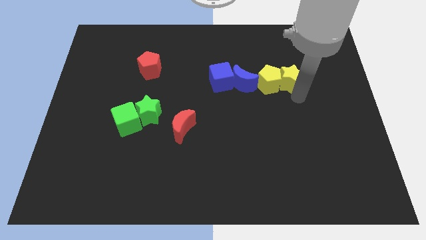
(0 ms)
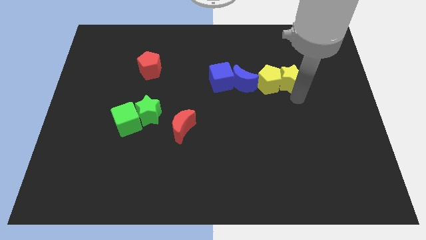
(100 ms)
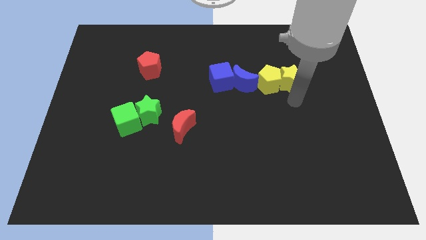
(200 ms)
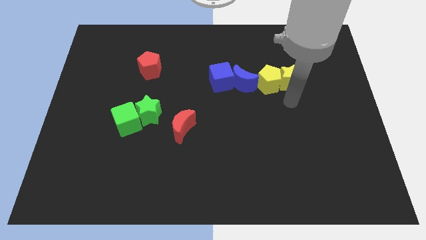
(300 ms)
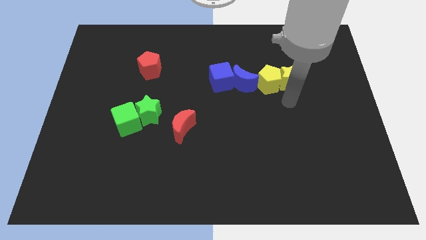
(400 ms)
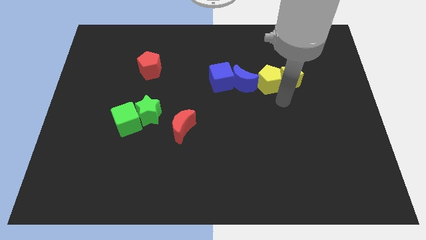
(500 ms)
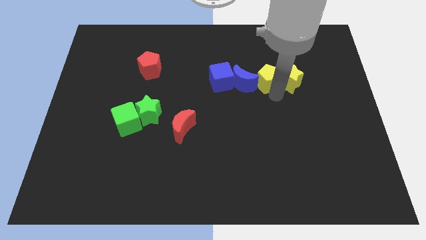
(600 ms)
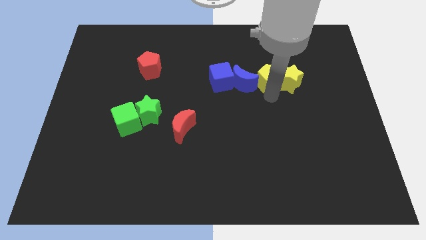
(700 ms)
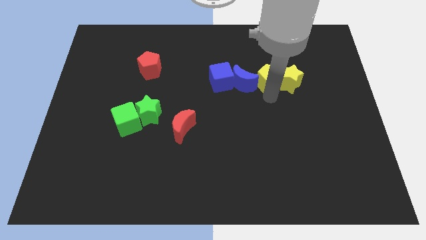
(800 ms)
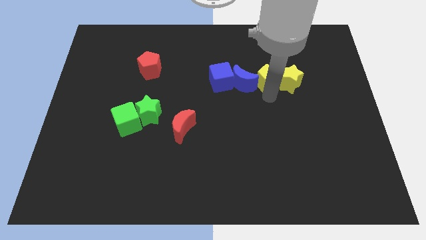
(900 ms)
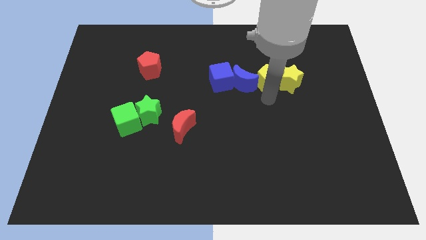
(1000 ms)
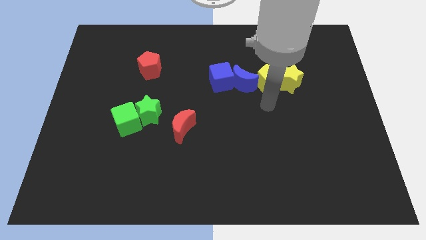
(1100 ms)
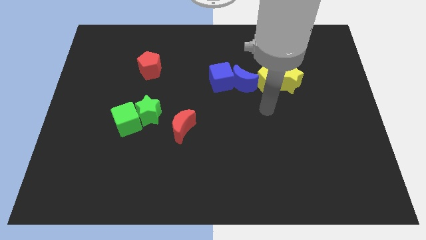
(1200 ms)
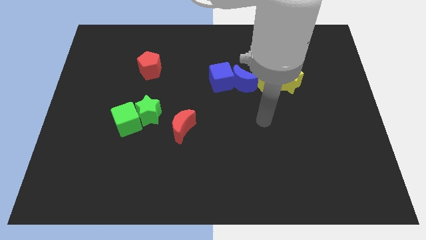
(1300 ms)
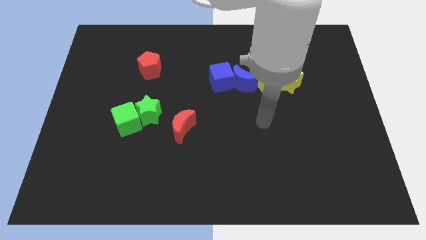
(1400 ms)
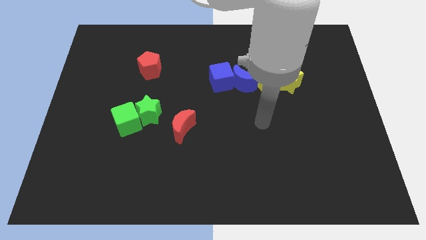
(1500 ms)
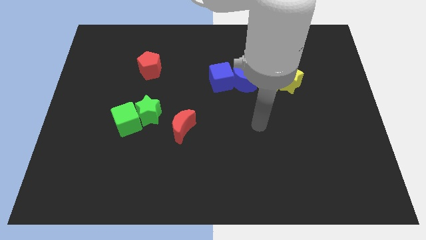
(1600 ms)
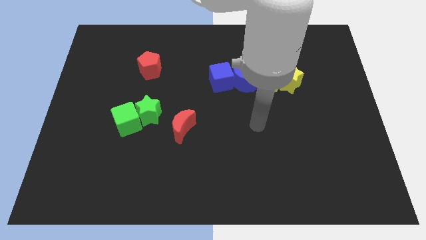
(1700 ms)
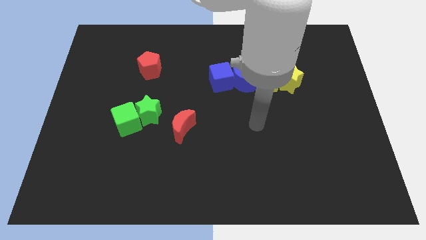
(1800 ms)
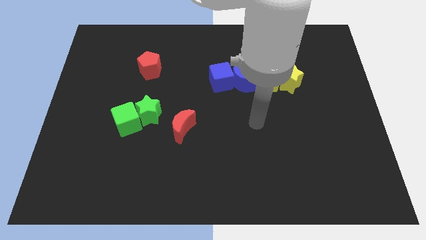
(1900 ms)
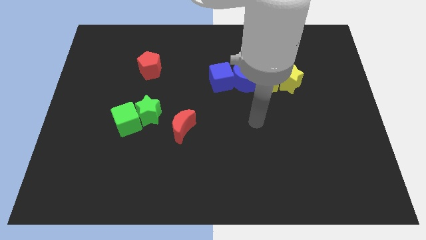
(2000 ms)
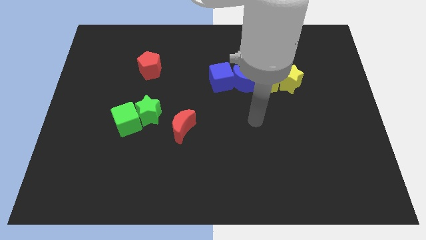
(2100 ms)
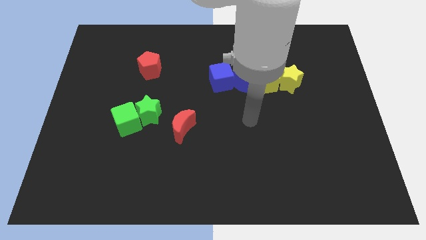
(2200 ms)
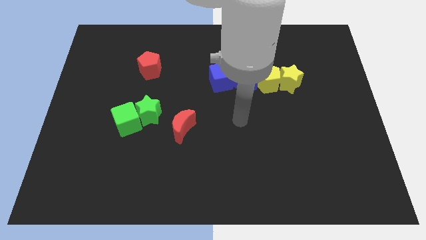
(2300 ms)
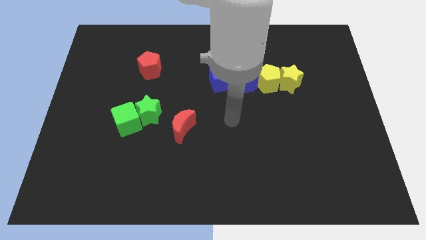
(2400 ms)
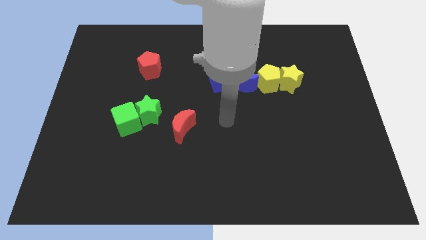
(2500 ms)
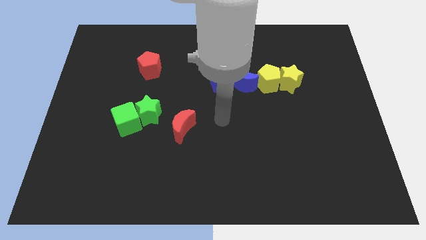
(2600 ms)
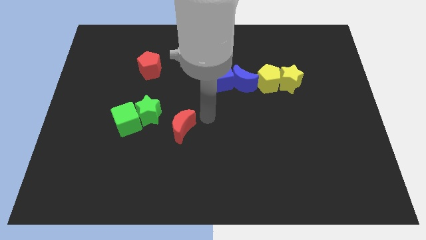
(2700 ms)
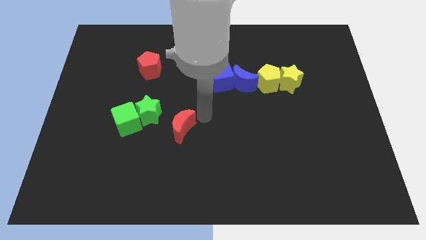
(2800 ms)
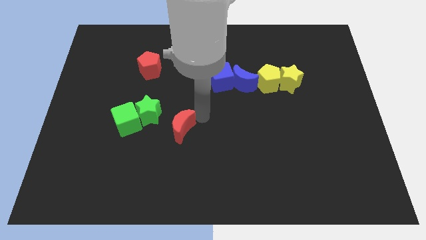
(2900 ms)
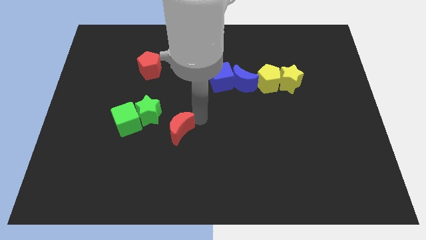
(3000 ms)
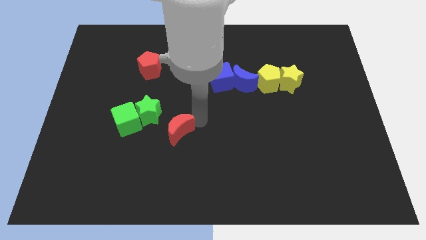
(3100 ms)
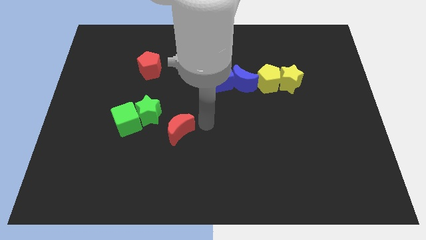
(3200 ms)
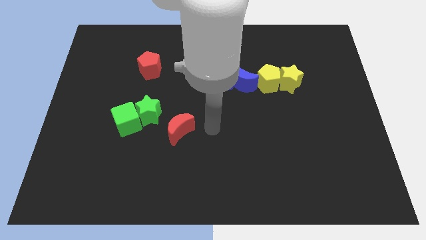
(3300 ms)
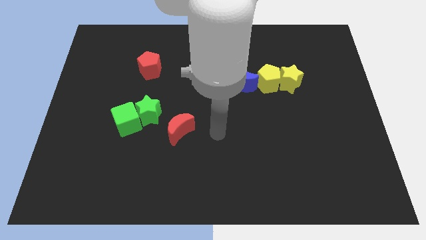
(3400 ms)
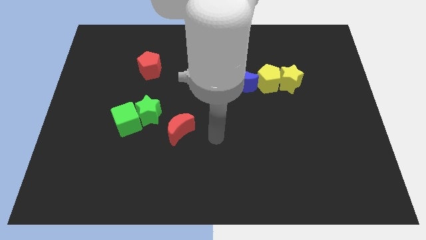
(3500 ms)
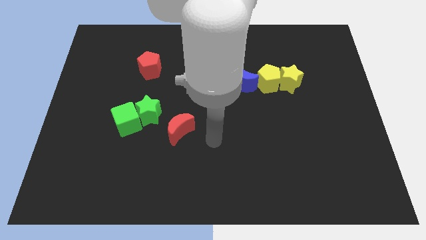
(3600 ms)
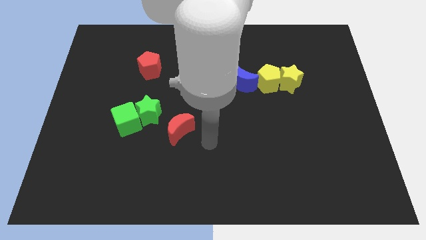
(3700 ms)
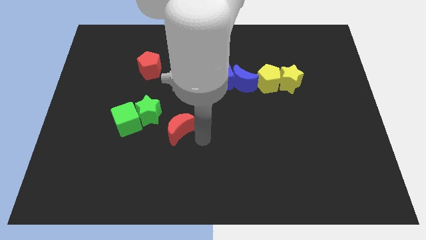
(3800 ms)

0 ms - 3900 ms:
push red moon slightly to its bottom

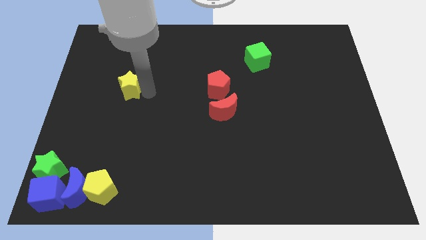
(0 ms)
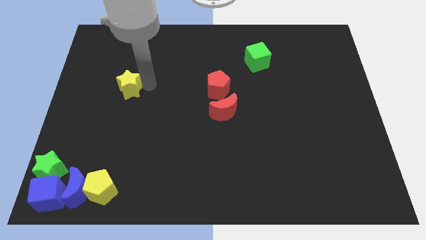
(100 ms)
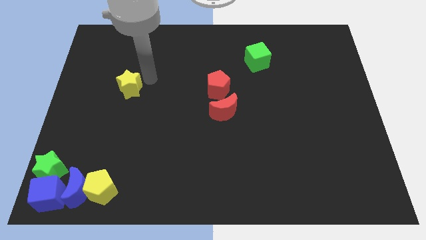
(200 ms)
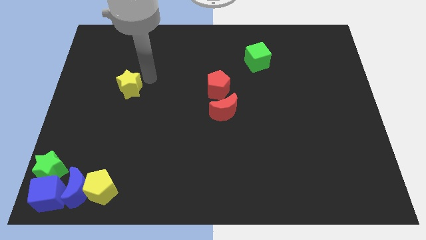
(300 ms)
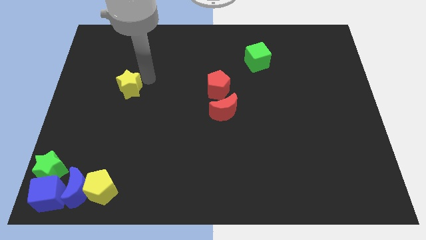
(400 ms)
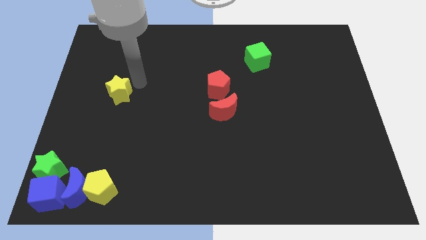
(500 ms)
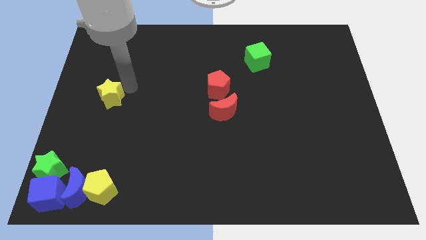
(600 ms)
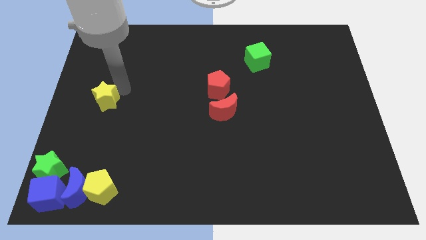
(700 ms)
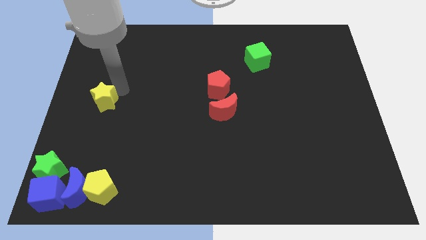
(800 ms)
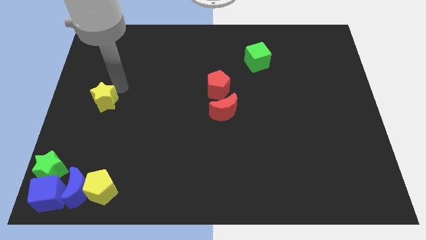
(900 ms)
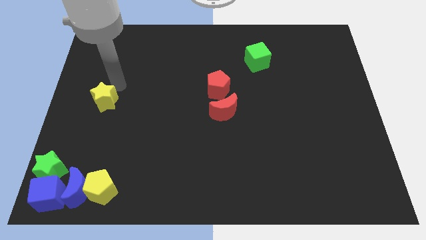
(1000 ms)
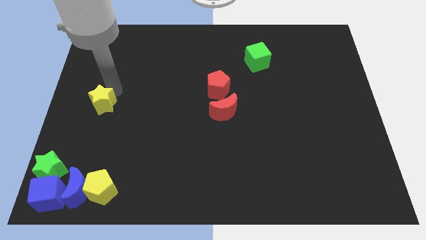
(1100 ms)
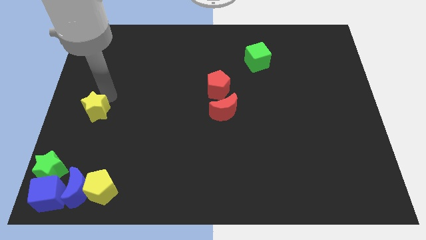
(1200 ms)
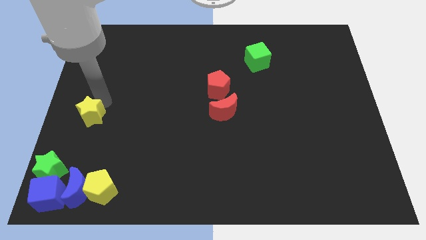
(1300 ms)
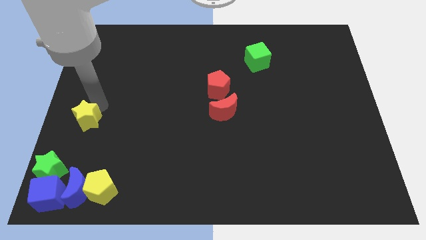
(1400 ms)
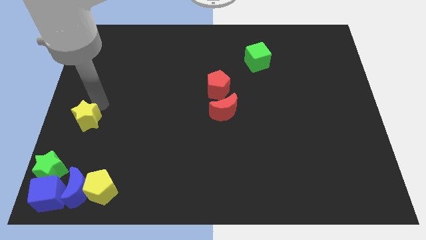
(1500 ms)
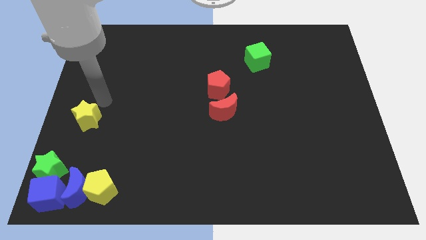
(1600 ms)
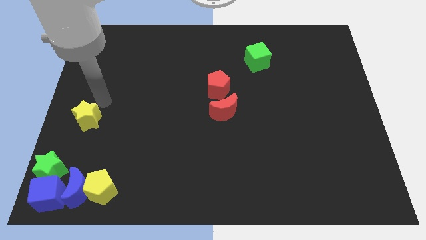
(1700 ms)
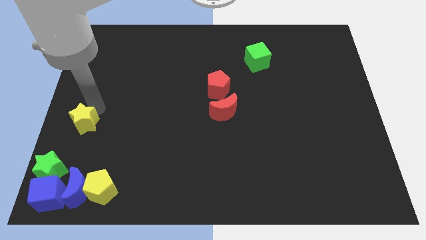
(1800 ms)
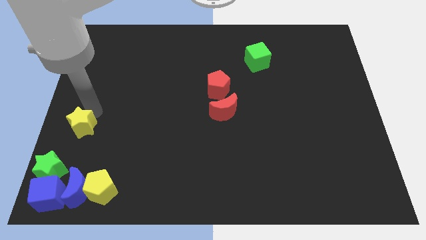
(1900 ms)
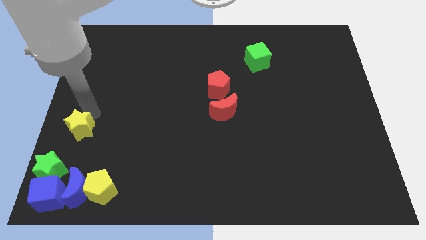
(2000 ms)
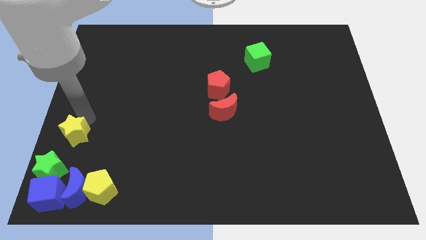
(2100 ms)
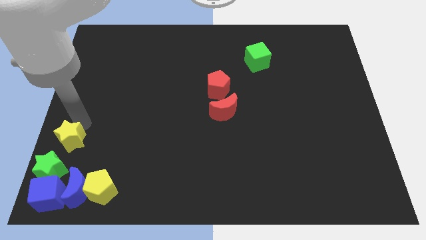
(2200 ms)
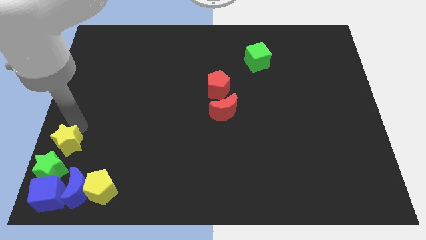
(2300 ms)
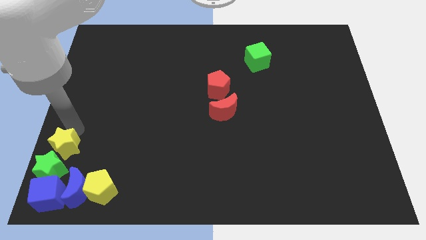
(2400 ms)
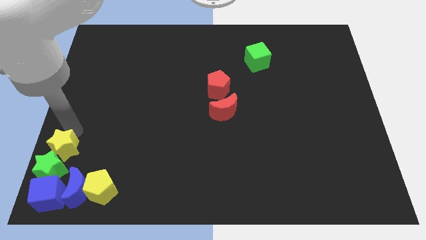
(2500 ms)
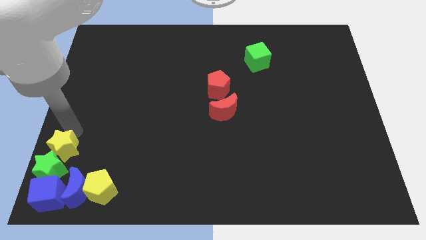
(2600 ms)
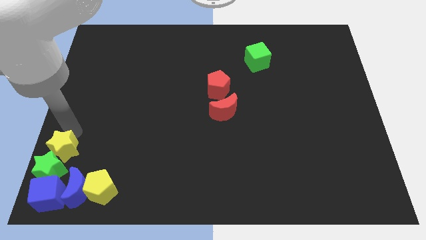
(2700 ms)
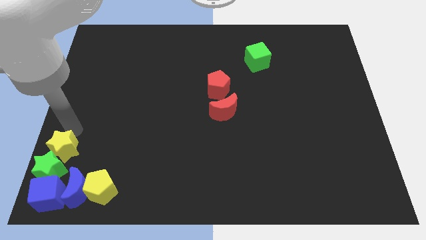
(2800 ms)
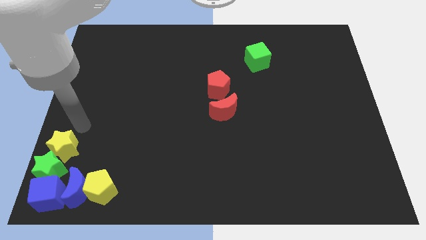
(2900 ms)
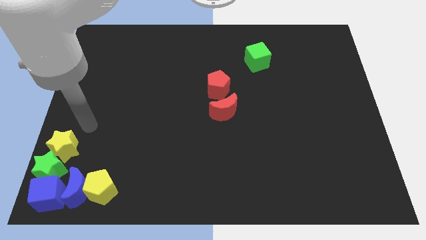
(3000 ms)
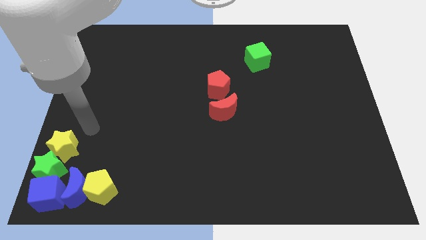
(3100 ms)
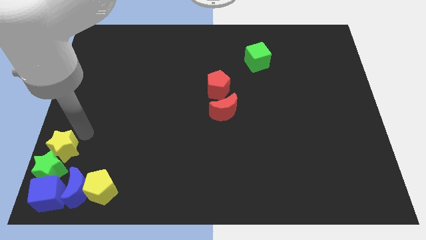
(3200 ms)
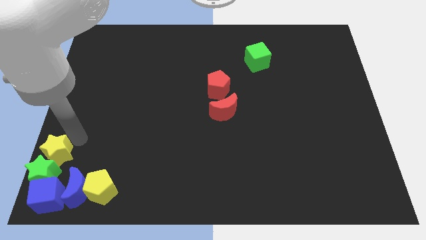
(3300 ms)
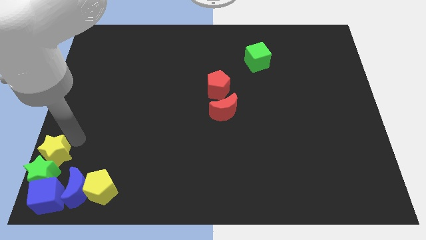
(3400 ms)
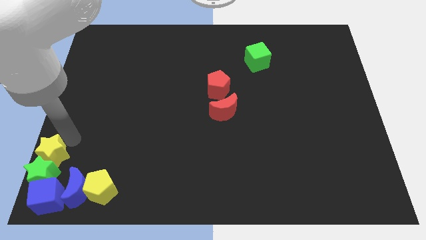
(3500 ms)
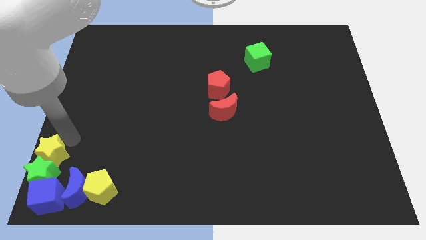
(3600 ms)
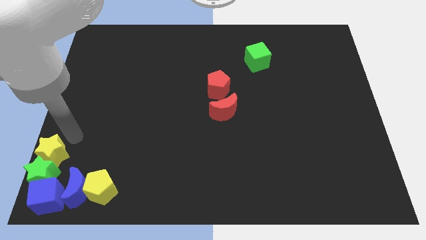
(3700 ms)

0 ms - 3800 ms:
drag the yellow star into the top side of the green star

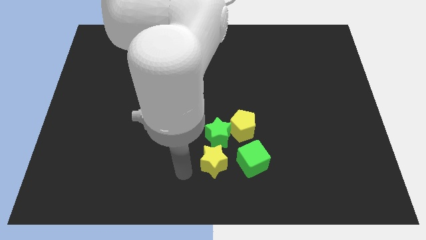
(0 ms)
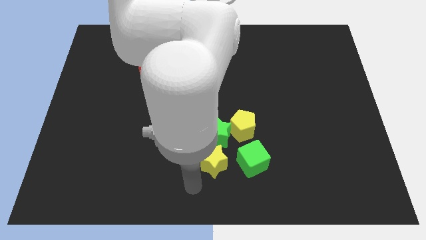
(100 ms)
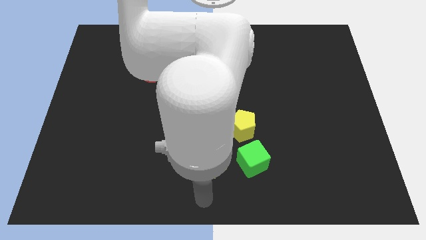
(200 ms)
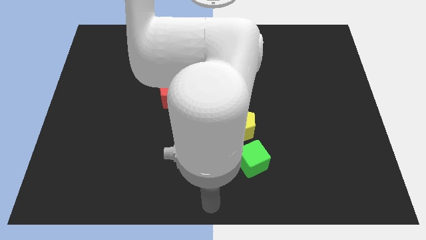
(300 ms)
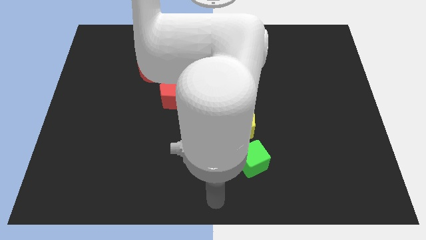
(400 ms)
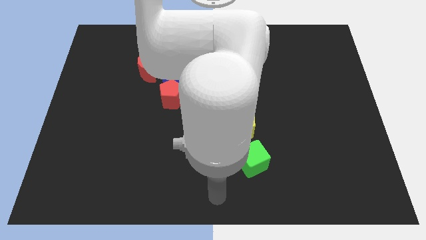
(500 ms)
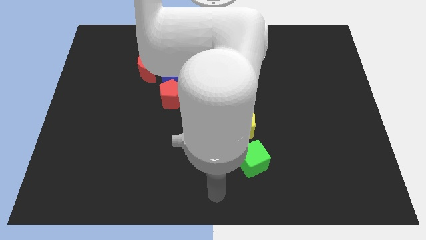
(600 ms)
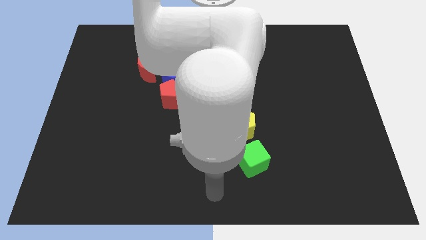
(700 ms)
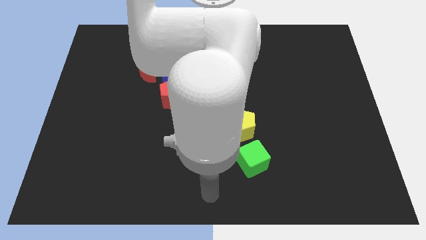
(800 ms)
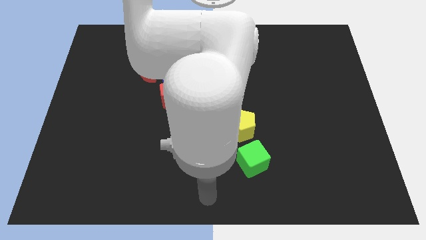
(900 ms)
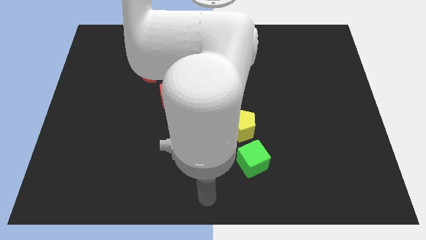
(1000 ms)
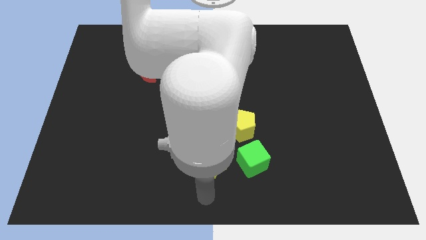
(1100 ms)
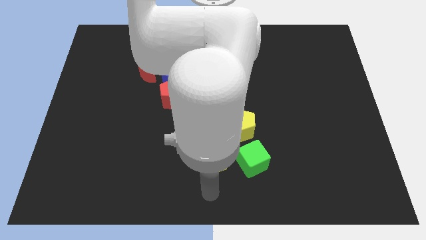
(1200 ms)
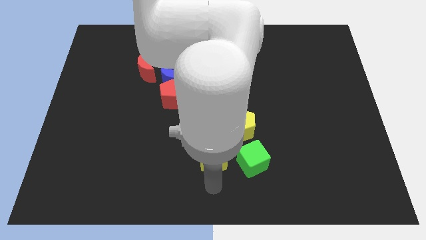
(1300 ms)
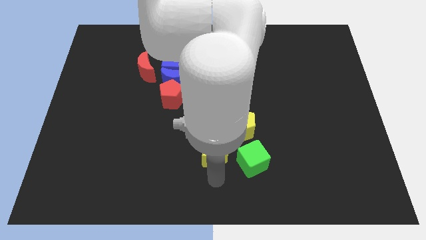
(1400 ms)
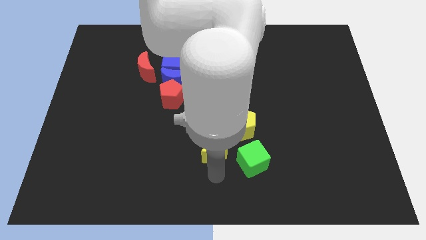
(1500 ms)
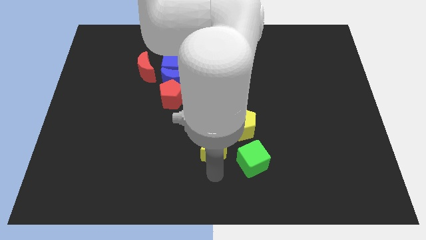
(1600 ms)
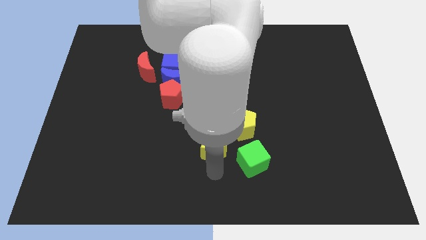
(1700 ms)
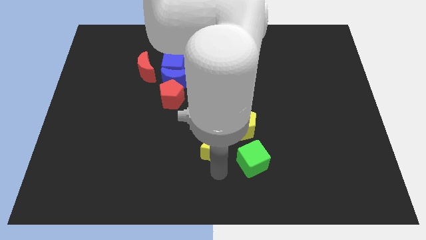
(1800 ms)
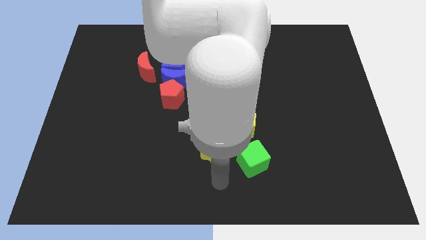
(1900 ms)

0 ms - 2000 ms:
move the yellow star towards the green star
